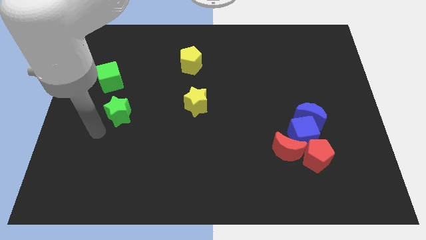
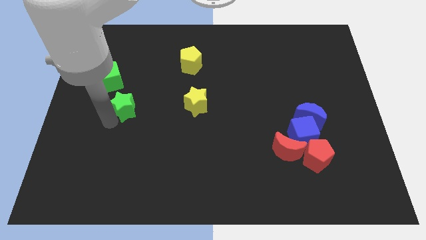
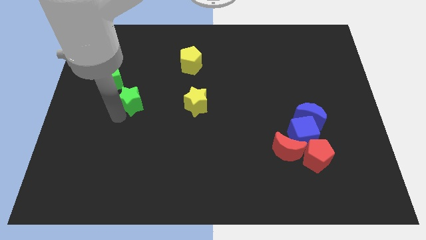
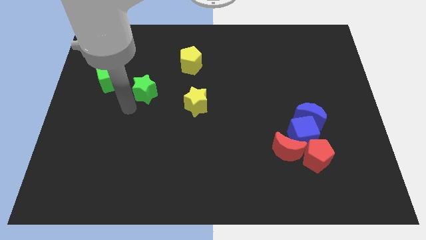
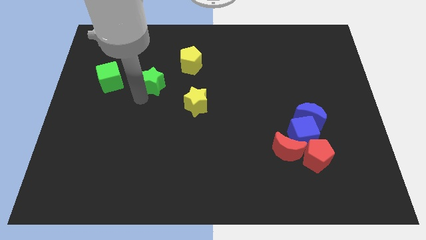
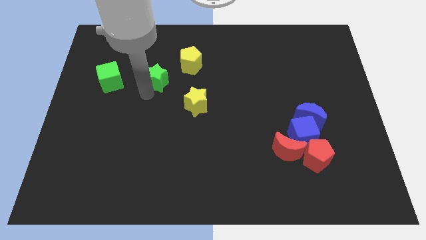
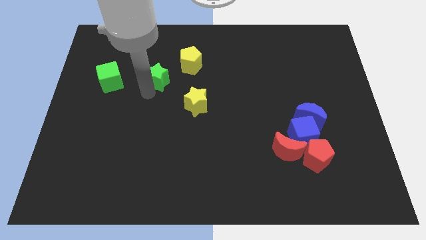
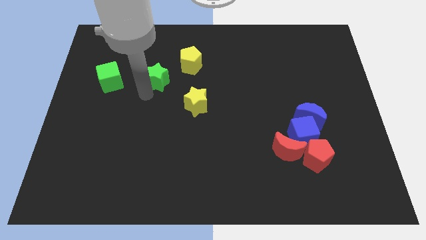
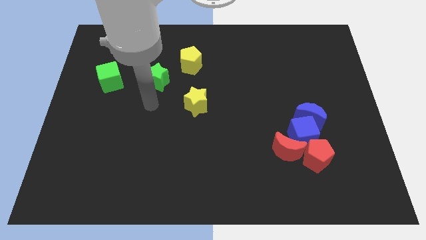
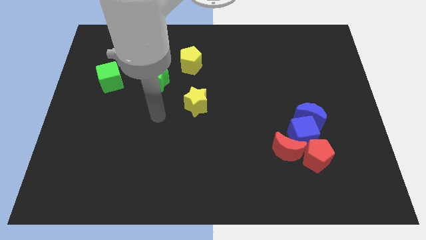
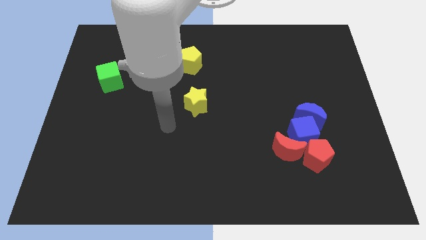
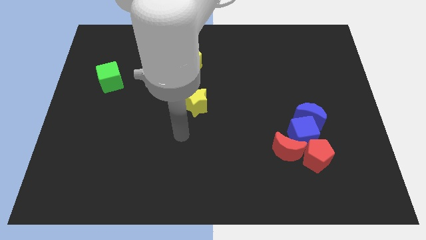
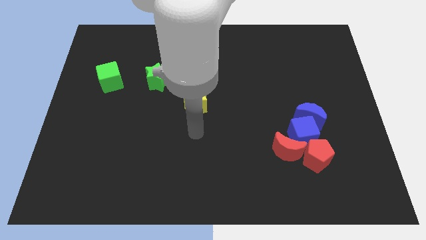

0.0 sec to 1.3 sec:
push the green star to the top of the board

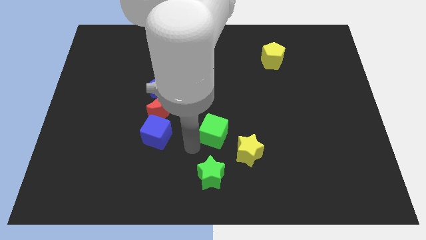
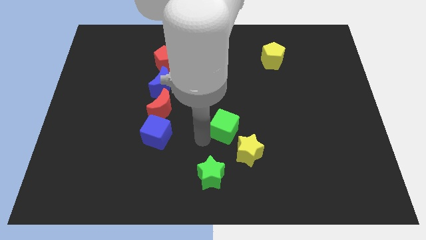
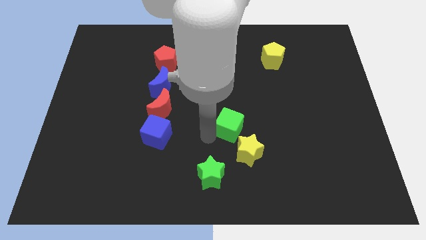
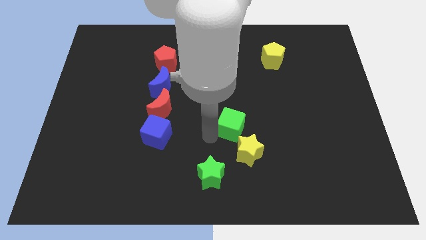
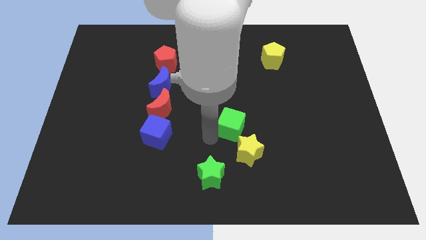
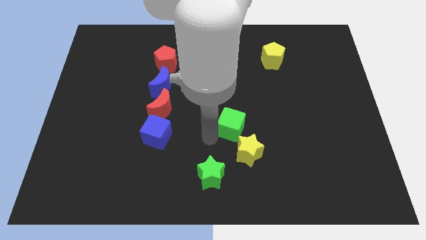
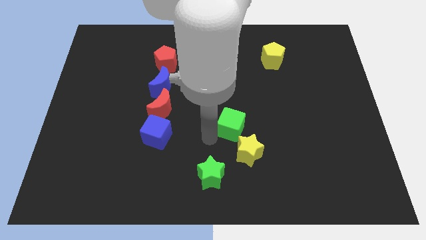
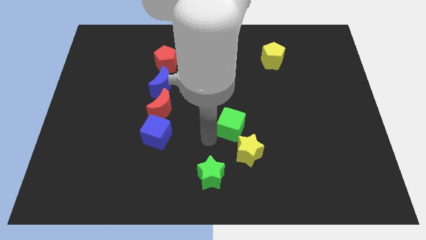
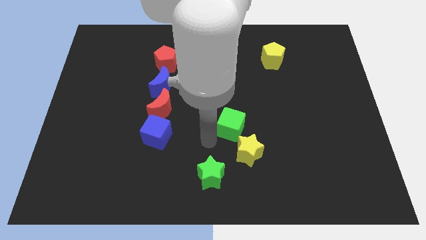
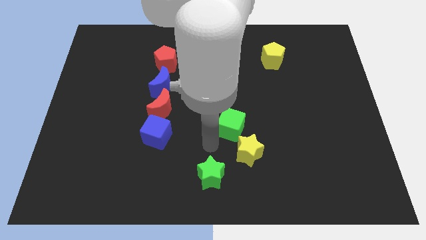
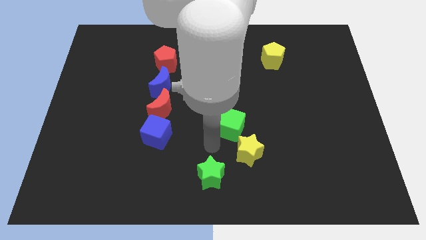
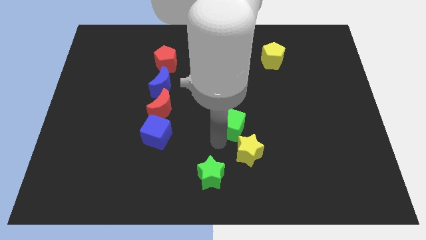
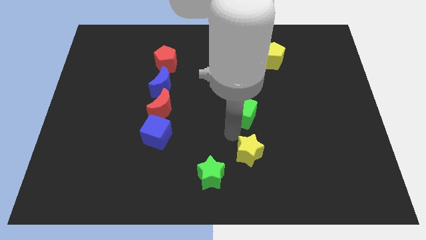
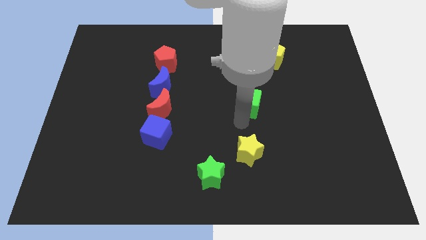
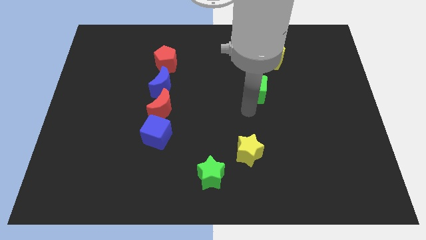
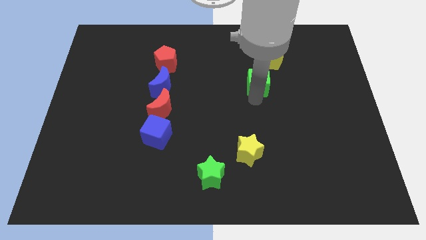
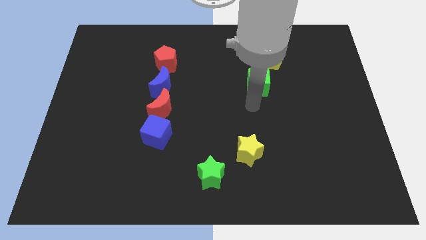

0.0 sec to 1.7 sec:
move the green cube towards the yellow pentagon

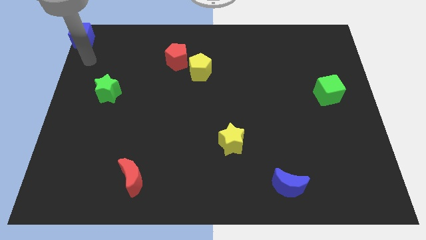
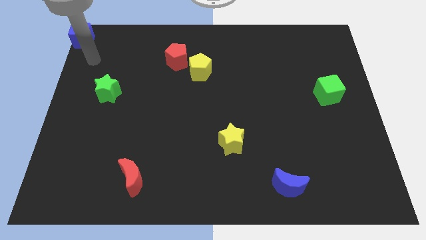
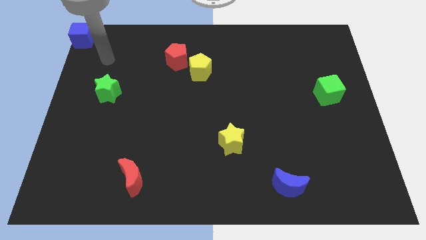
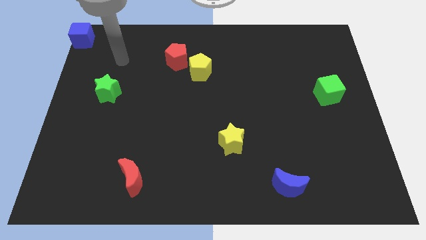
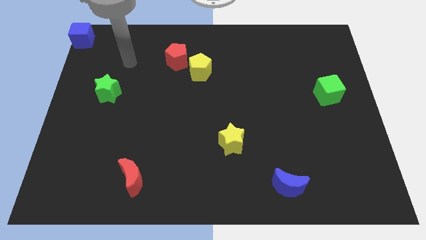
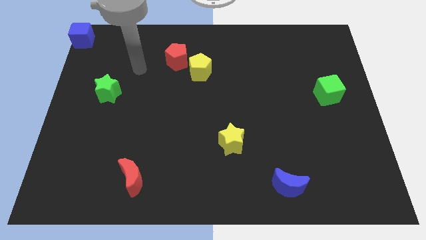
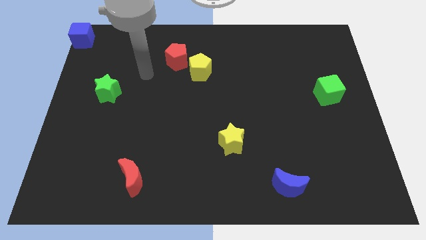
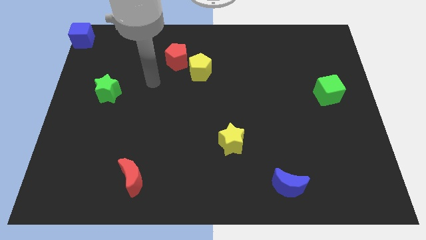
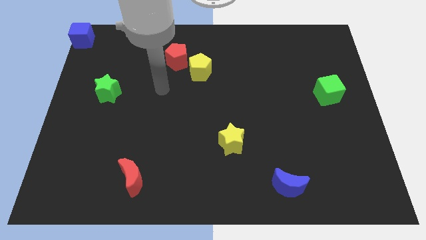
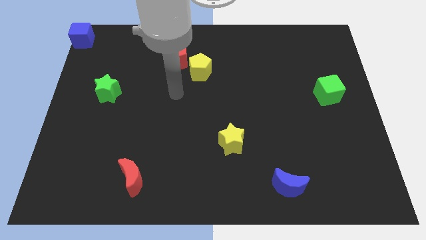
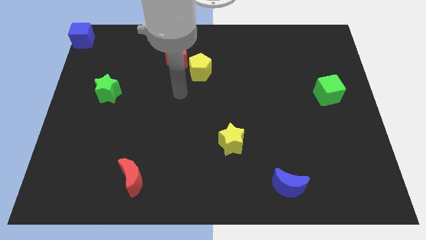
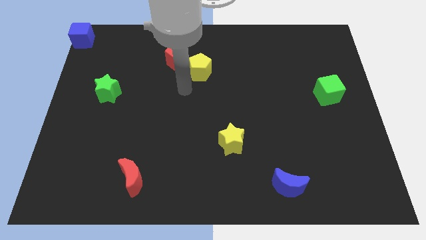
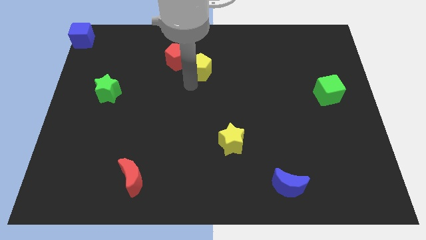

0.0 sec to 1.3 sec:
move your arm to the bottom of yellow pentagon

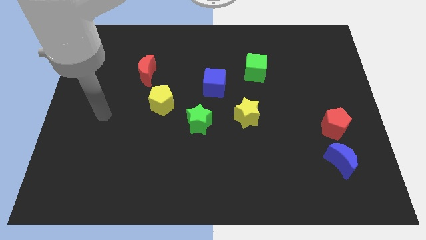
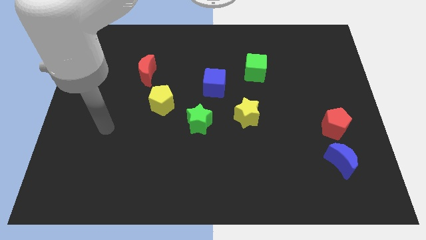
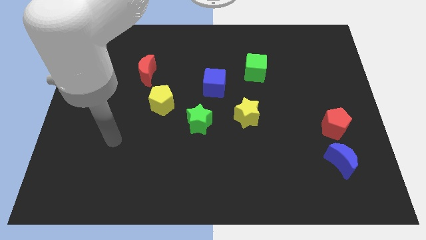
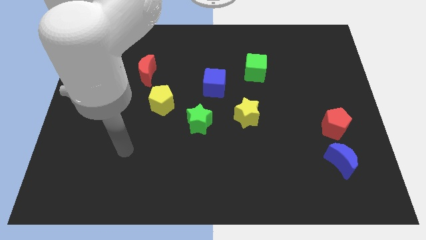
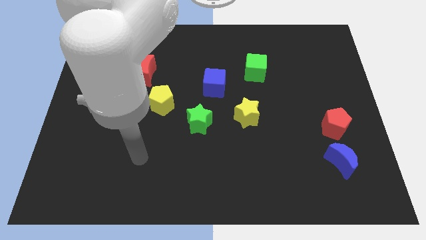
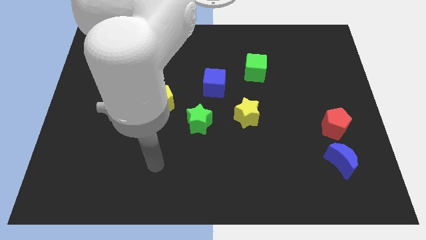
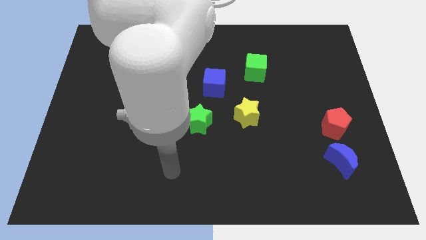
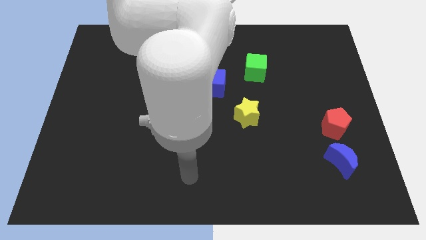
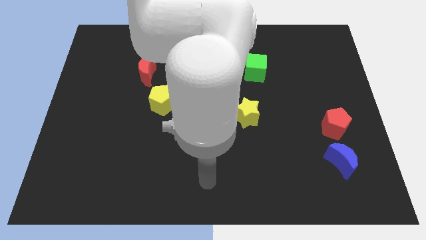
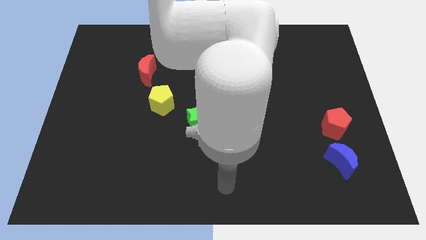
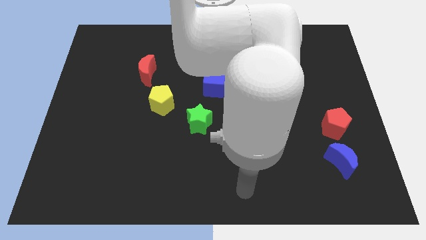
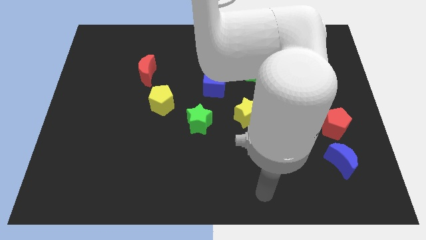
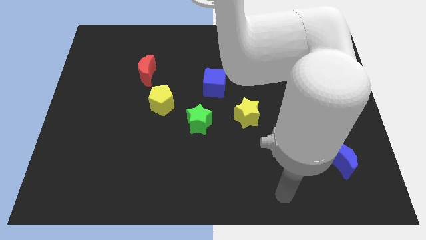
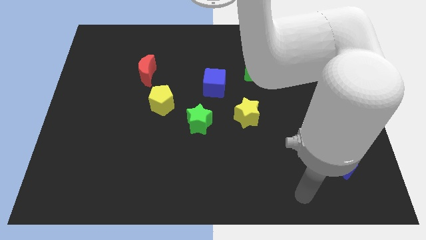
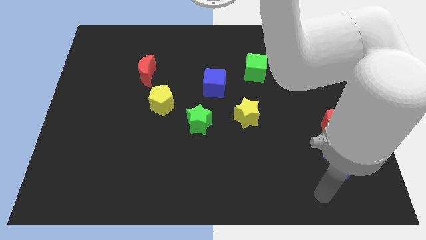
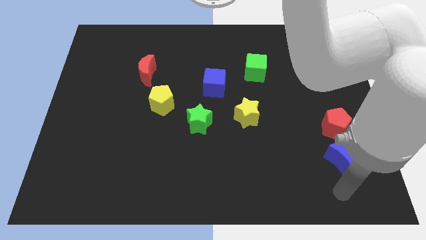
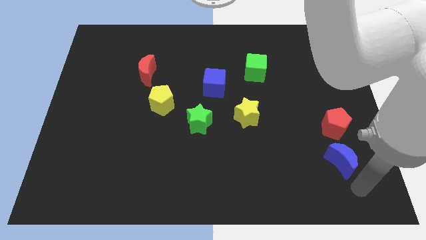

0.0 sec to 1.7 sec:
point your arm below the blue moon

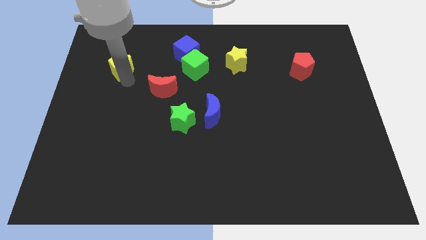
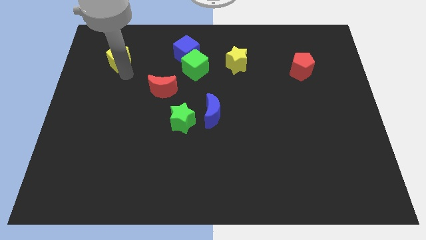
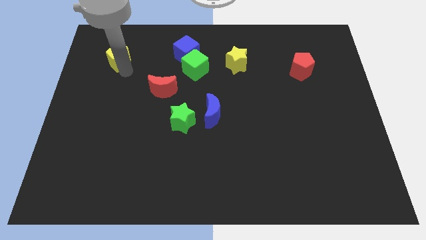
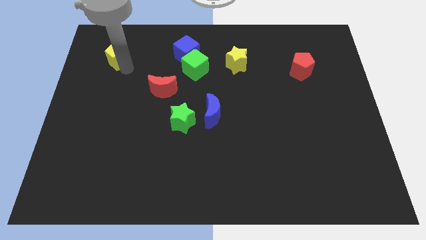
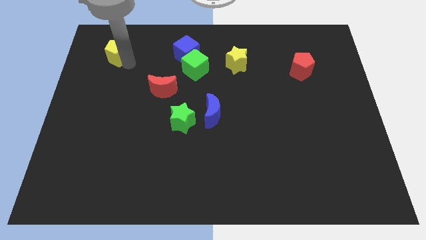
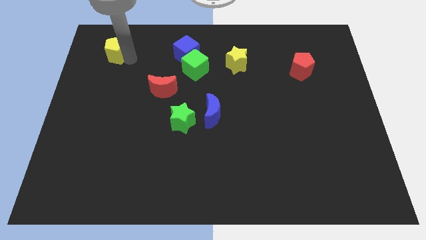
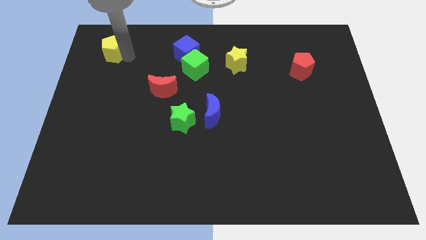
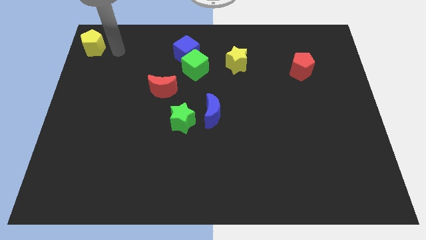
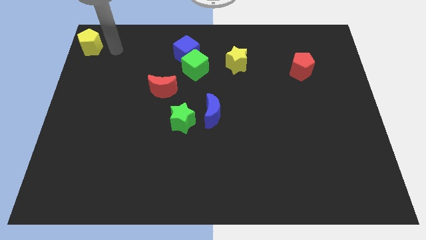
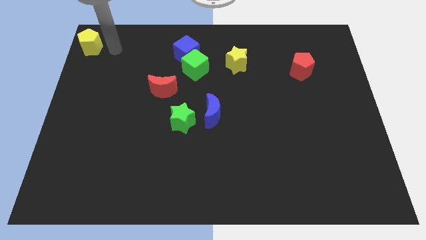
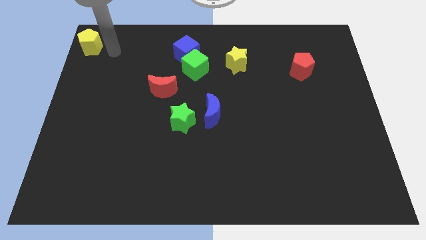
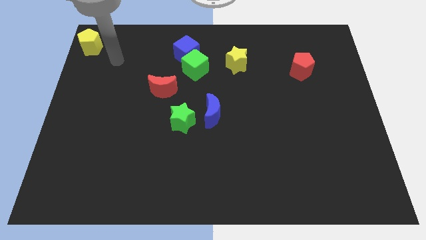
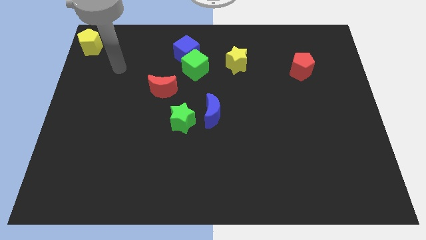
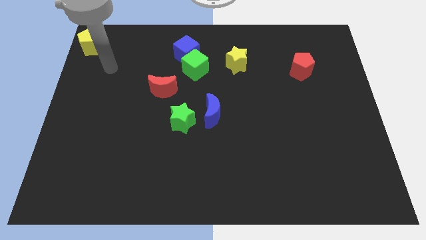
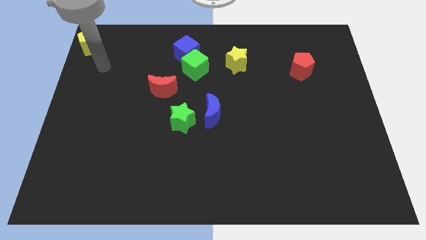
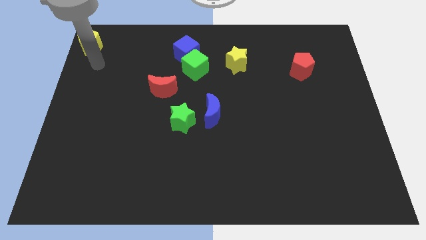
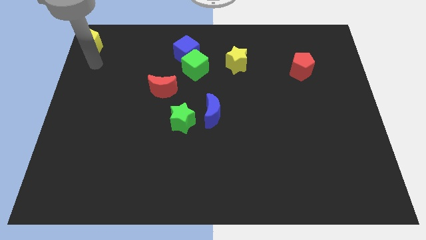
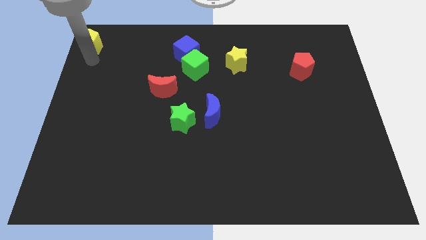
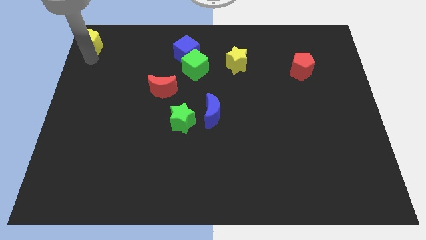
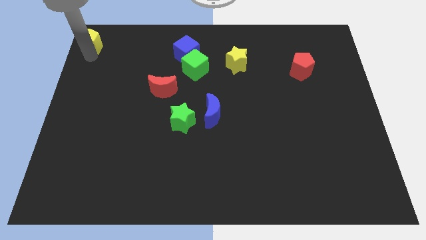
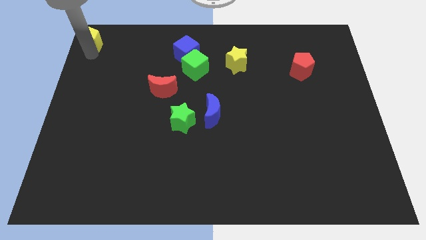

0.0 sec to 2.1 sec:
move the yellow pentagon to the left top corner

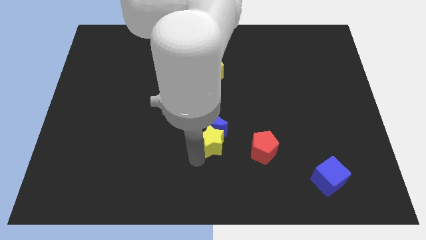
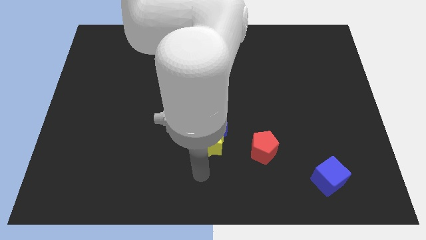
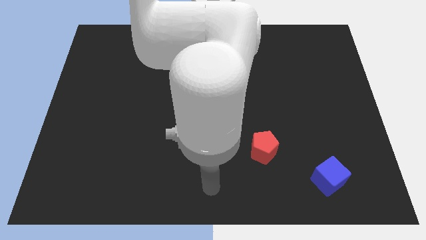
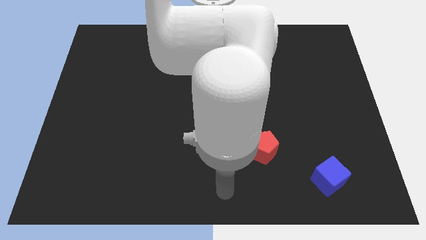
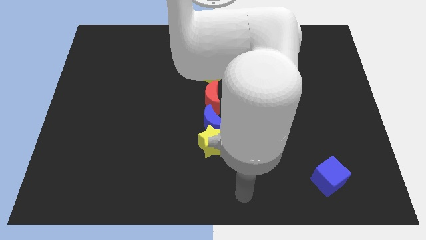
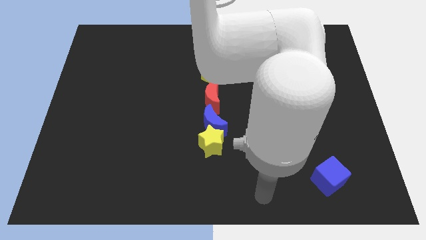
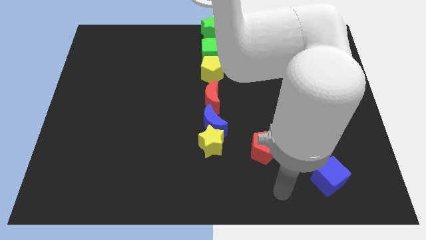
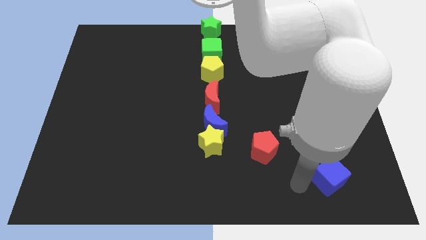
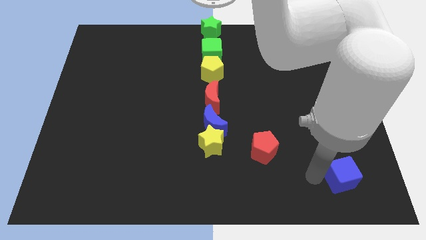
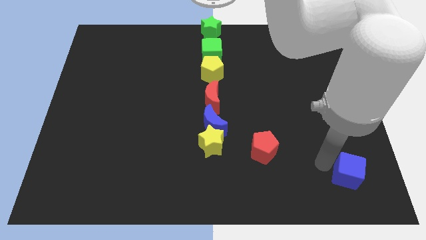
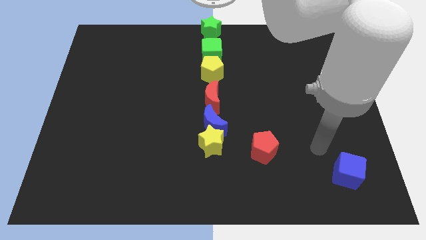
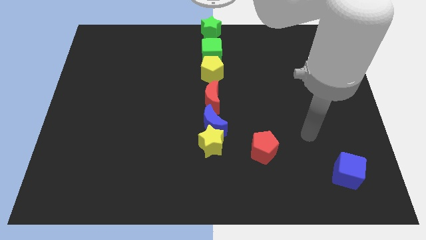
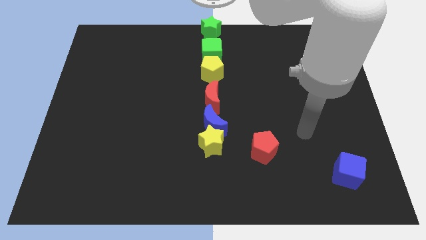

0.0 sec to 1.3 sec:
move the blue cube slightly to the right
